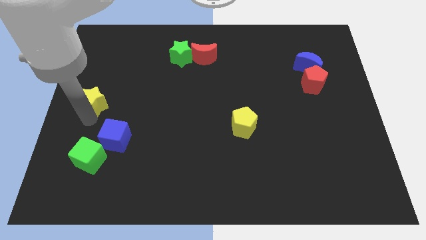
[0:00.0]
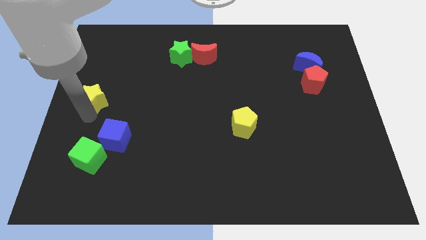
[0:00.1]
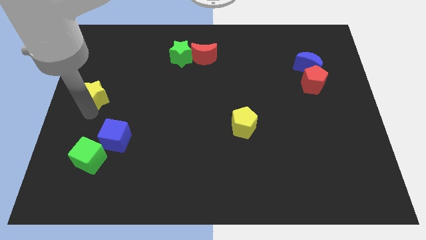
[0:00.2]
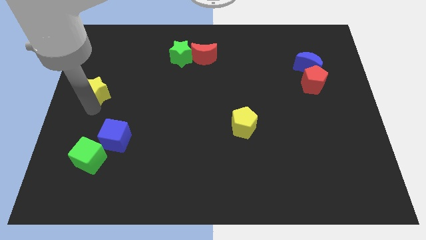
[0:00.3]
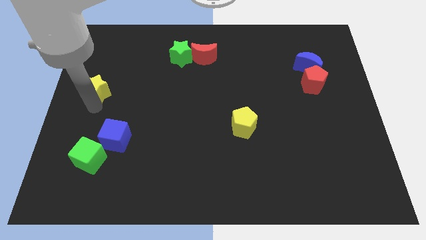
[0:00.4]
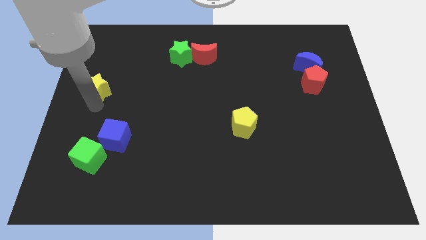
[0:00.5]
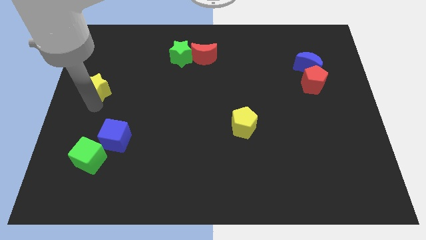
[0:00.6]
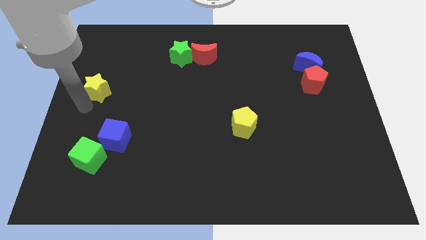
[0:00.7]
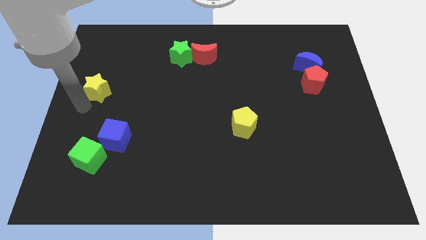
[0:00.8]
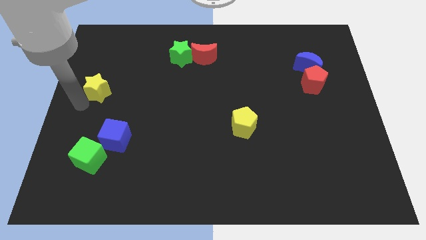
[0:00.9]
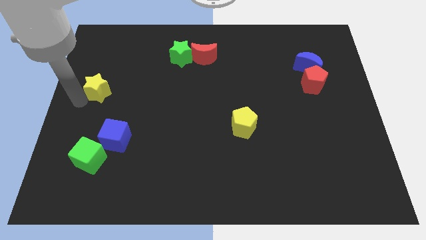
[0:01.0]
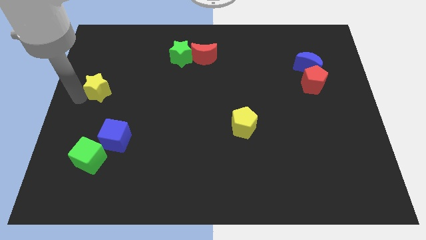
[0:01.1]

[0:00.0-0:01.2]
push the yellow star slightly to the top

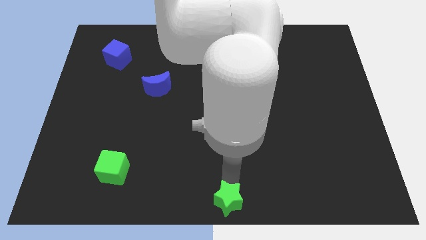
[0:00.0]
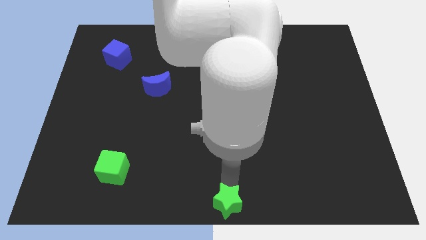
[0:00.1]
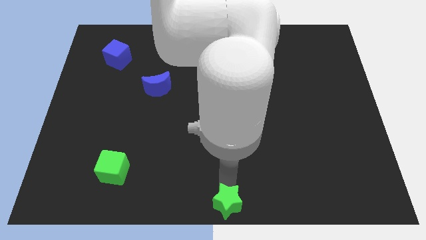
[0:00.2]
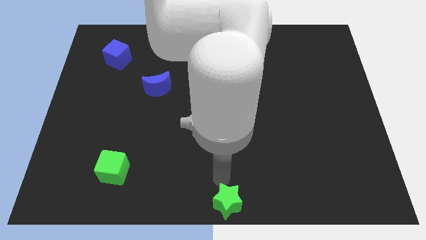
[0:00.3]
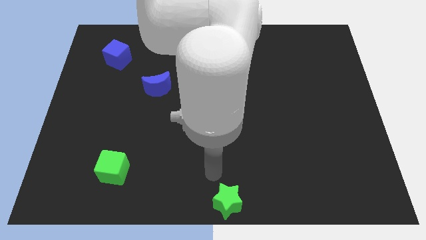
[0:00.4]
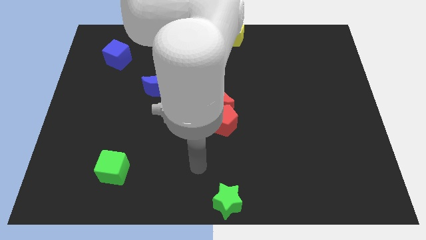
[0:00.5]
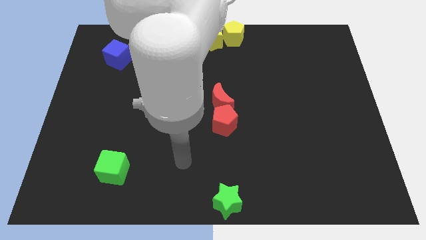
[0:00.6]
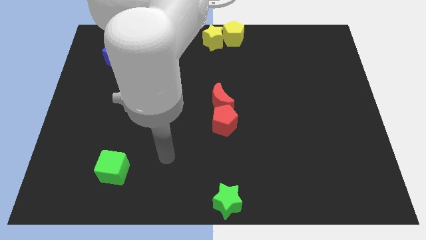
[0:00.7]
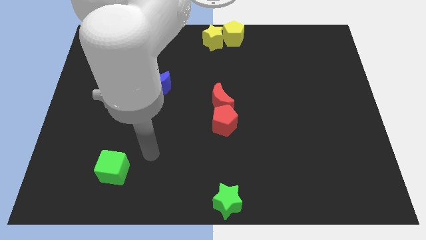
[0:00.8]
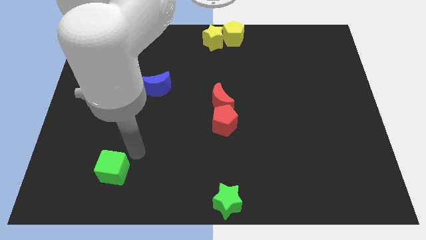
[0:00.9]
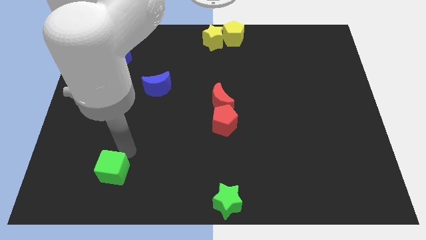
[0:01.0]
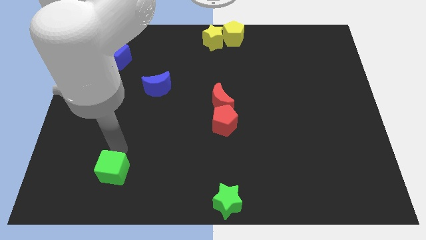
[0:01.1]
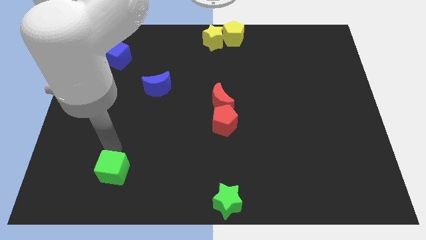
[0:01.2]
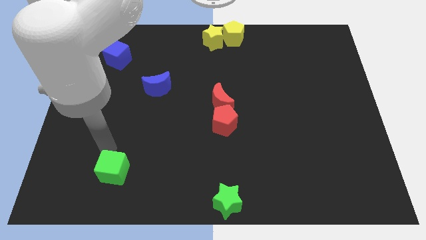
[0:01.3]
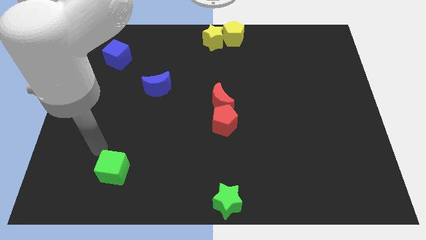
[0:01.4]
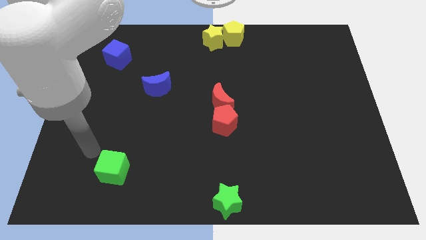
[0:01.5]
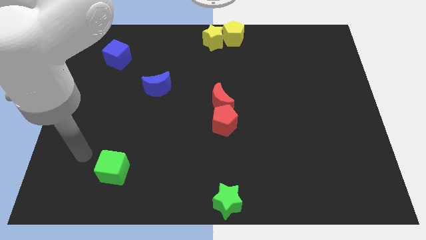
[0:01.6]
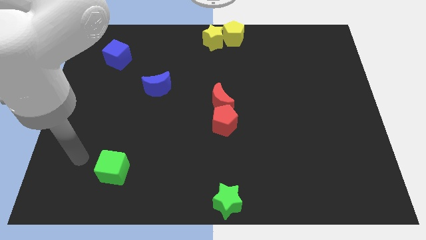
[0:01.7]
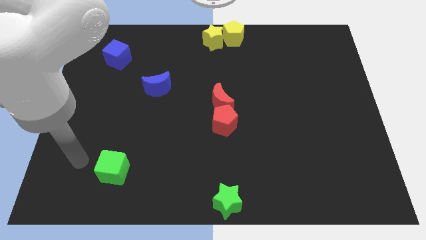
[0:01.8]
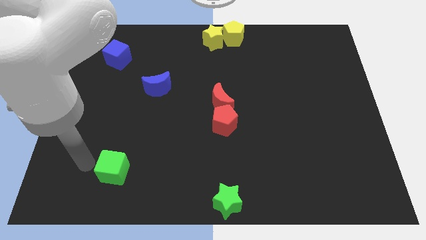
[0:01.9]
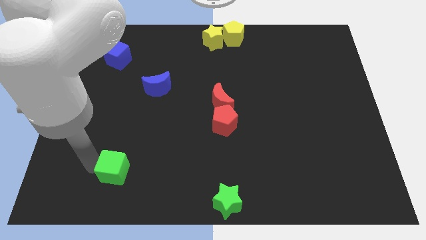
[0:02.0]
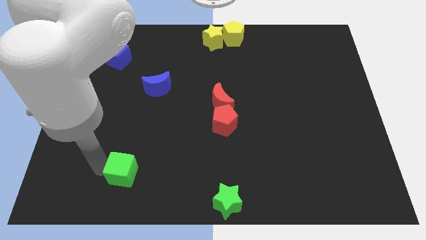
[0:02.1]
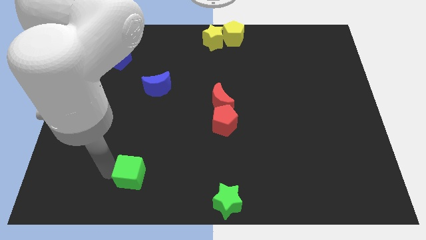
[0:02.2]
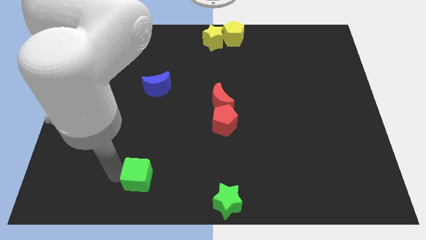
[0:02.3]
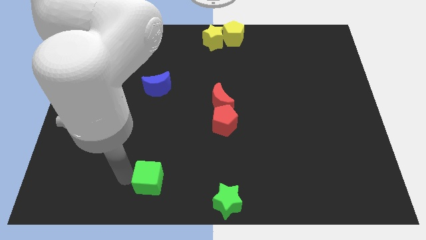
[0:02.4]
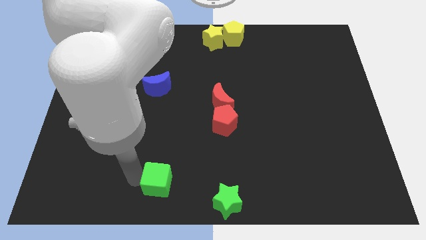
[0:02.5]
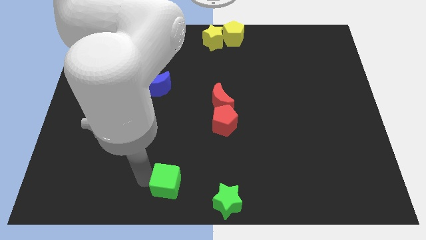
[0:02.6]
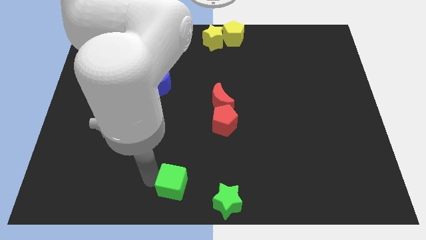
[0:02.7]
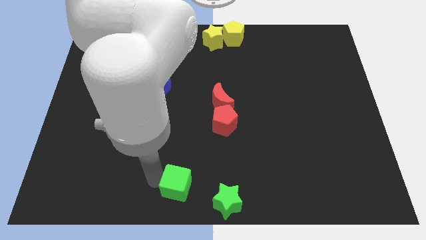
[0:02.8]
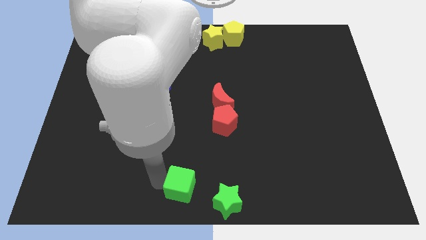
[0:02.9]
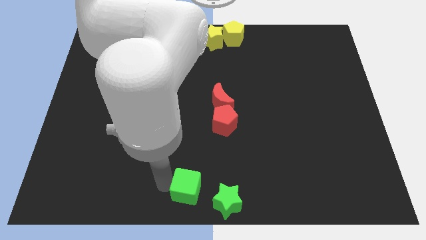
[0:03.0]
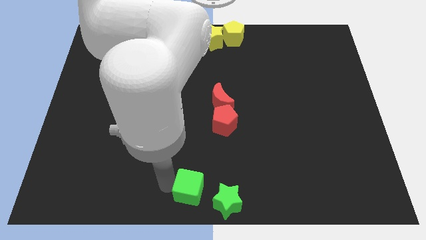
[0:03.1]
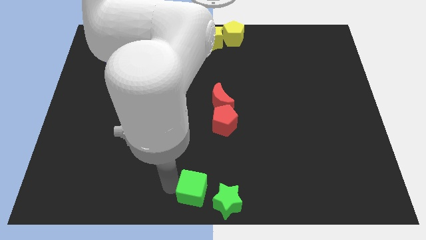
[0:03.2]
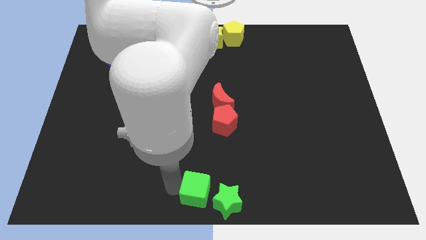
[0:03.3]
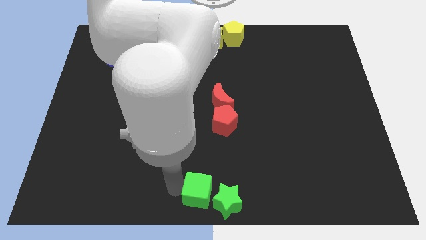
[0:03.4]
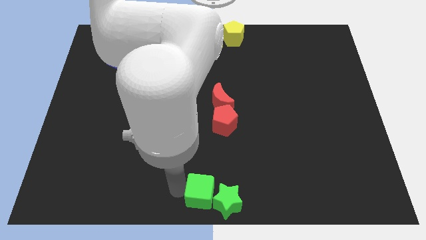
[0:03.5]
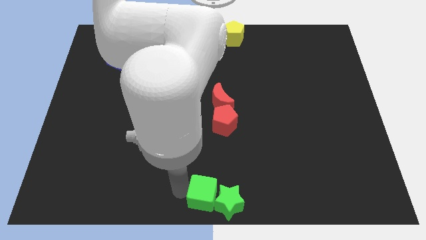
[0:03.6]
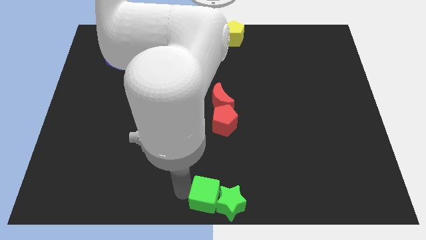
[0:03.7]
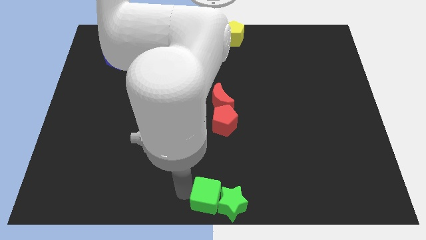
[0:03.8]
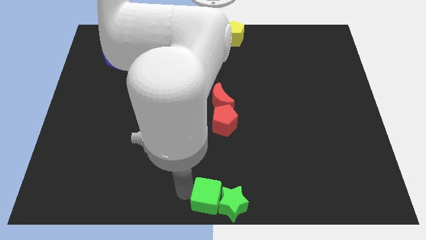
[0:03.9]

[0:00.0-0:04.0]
place the green cube left to the green star

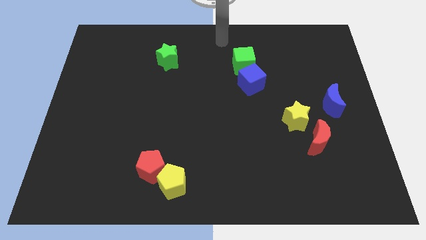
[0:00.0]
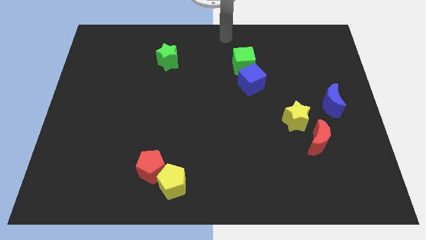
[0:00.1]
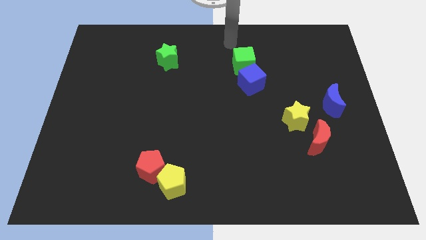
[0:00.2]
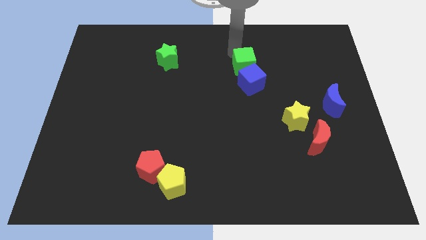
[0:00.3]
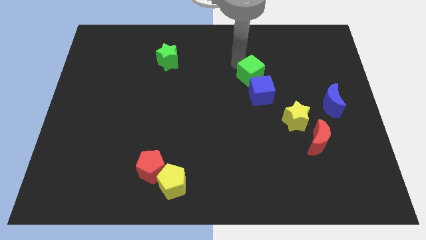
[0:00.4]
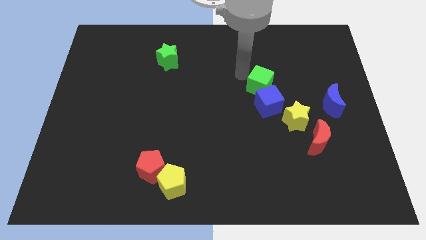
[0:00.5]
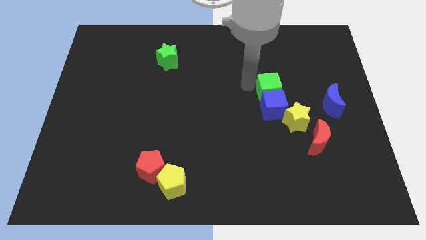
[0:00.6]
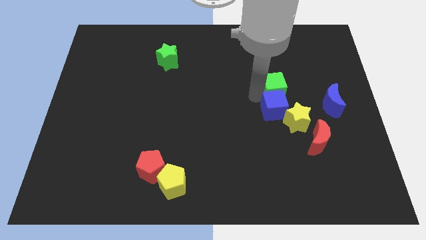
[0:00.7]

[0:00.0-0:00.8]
push the cubes towards the yellow star

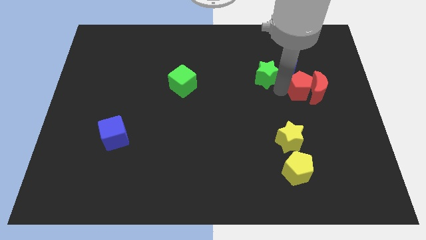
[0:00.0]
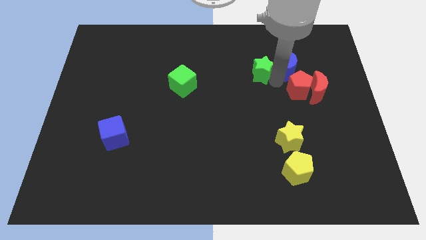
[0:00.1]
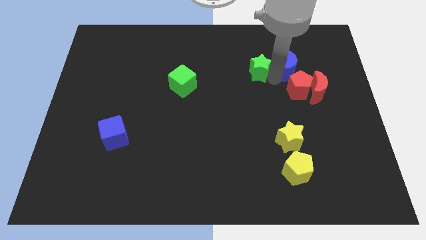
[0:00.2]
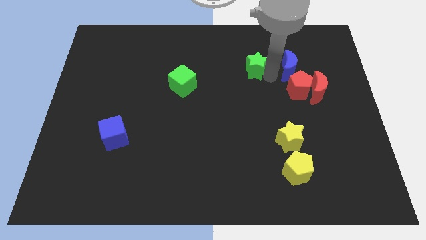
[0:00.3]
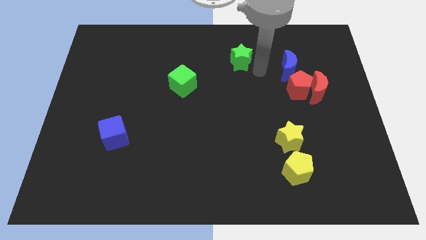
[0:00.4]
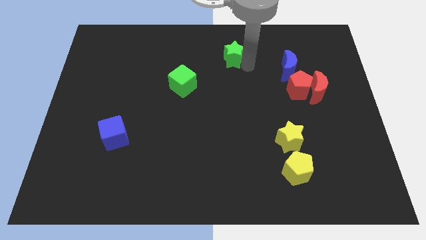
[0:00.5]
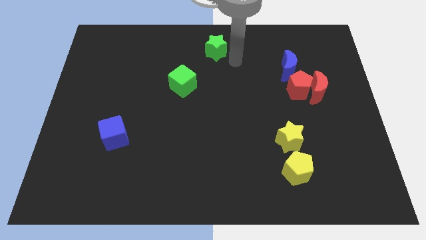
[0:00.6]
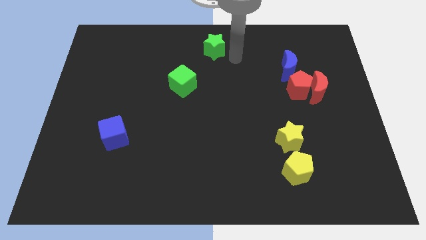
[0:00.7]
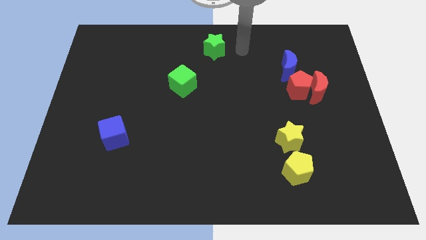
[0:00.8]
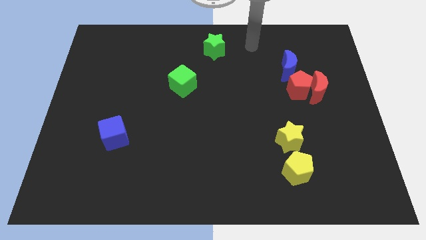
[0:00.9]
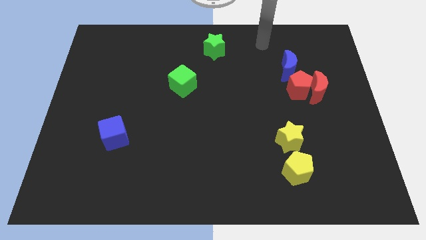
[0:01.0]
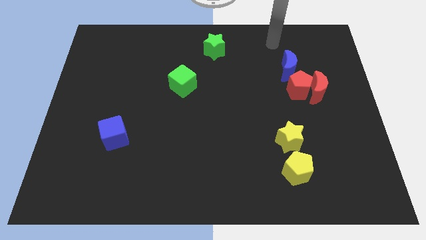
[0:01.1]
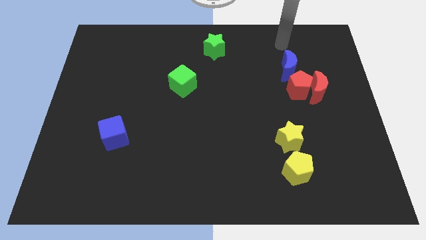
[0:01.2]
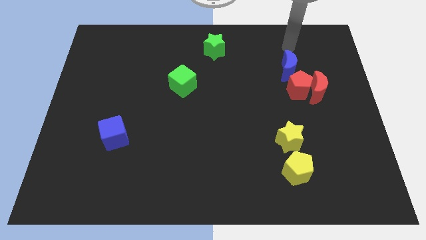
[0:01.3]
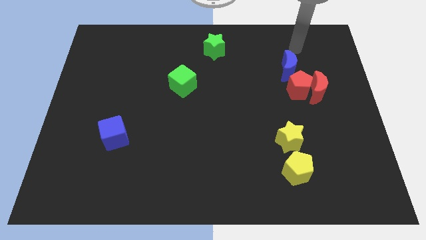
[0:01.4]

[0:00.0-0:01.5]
slide the green star towards the top center

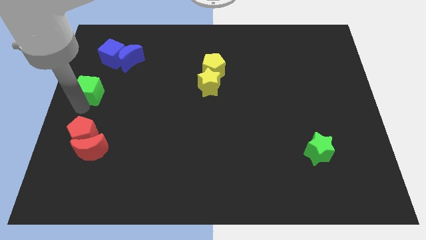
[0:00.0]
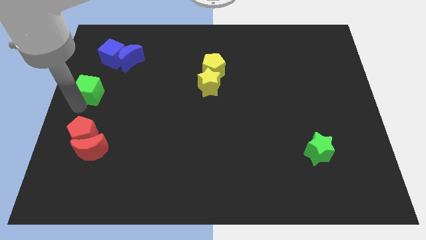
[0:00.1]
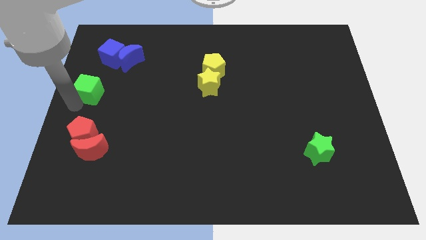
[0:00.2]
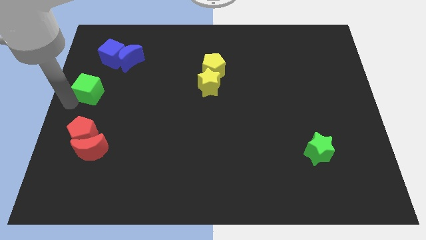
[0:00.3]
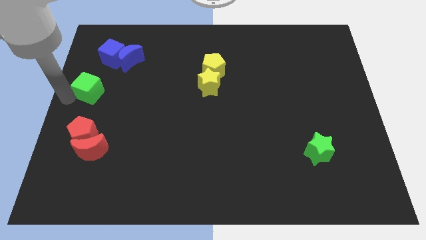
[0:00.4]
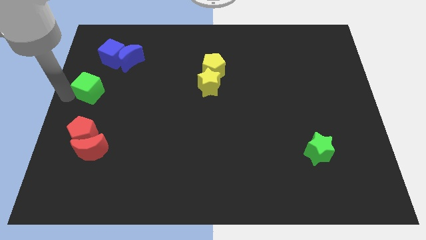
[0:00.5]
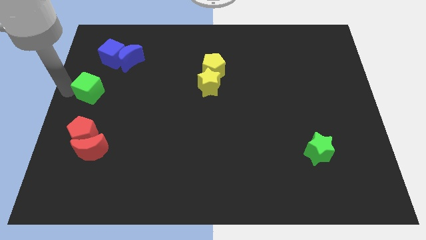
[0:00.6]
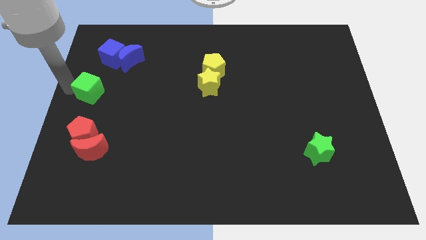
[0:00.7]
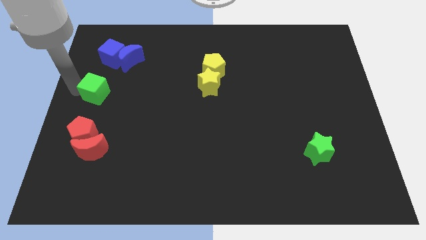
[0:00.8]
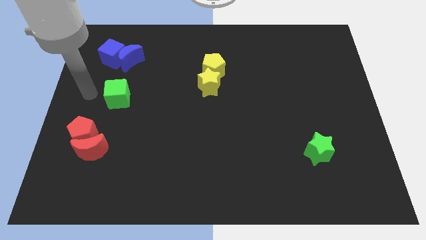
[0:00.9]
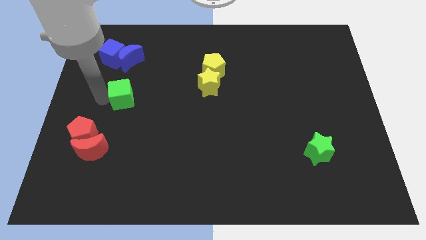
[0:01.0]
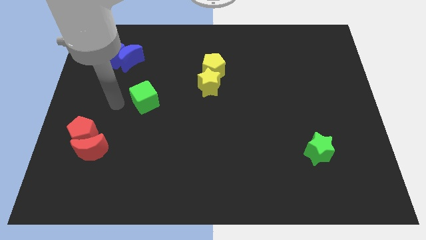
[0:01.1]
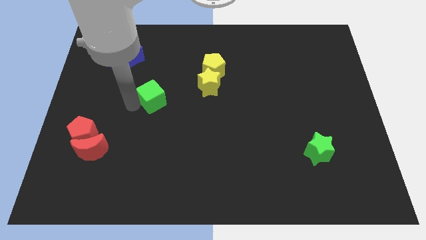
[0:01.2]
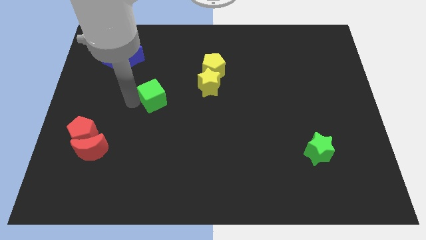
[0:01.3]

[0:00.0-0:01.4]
move the green cube towards the yellow star

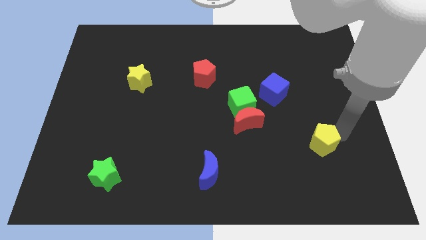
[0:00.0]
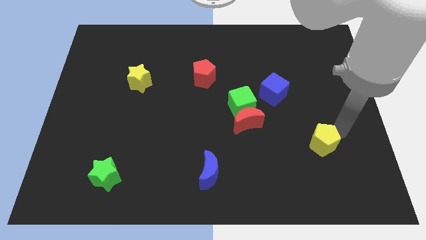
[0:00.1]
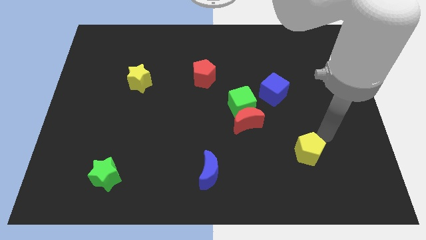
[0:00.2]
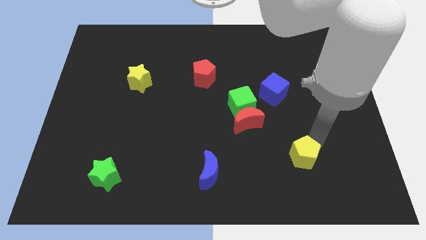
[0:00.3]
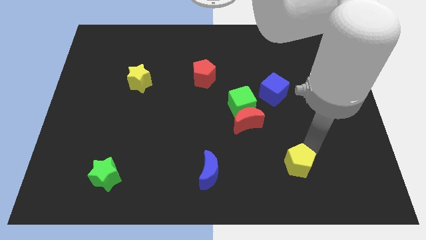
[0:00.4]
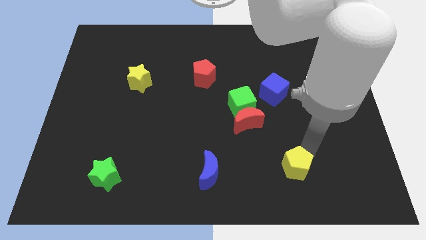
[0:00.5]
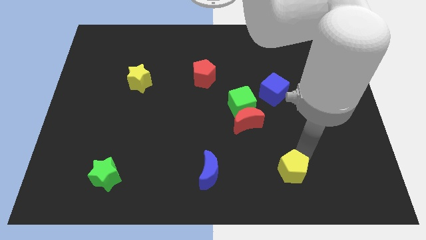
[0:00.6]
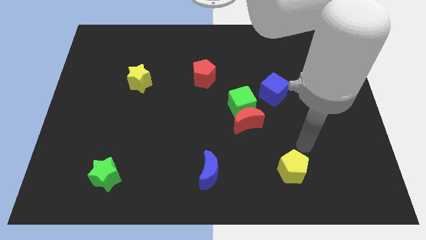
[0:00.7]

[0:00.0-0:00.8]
place yellow start below red crescent
